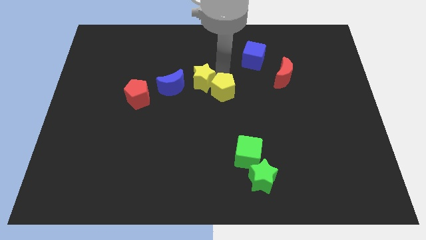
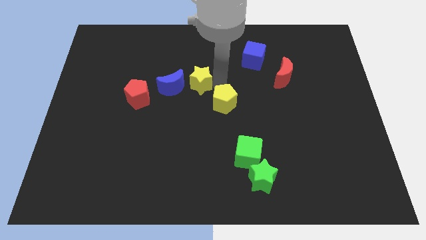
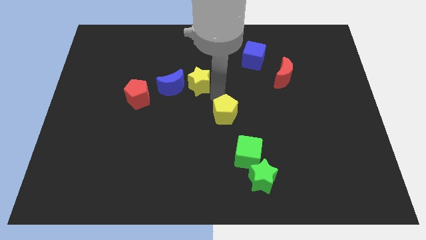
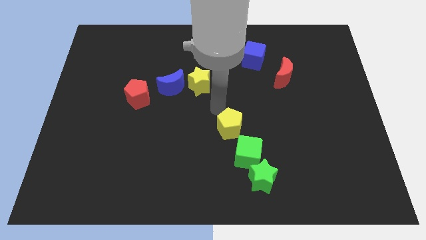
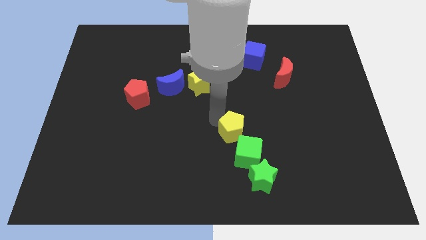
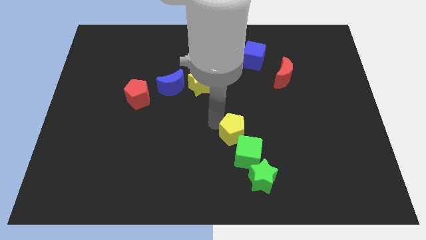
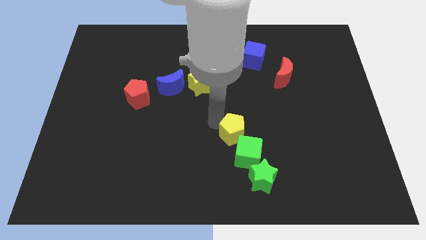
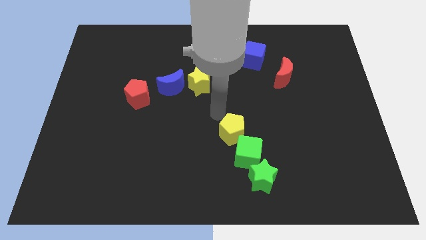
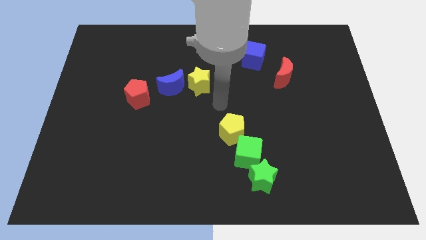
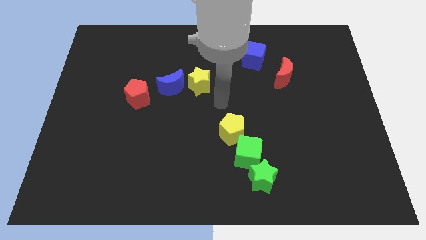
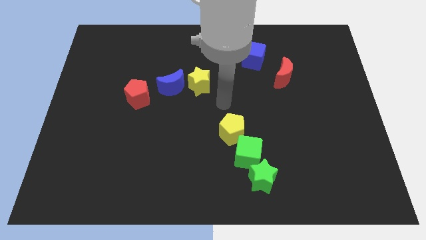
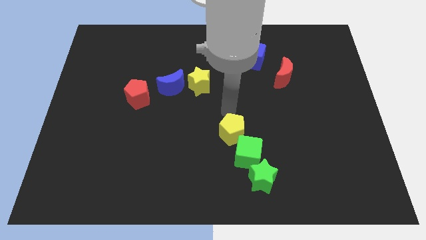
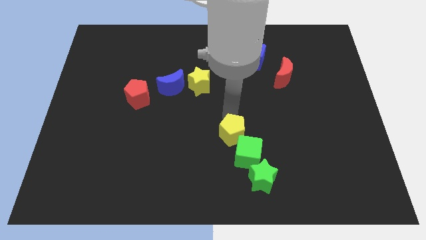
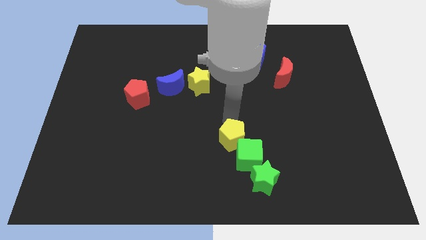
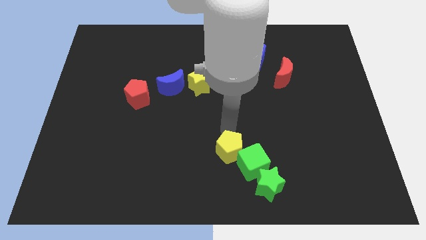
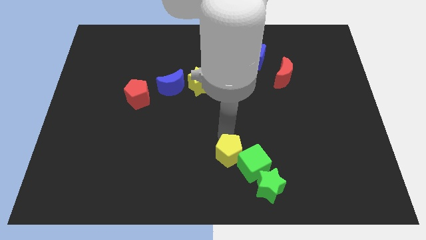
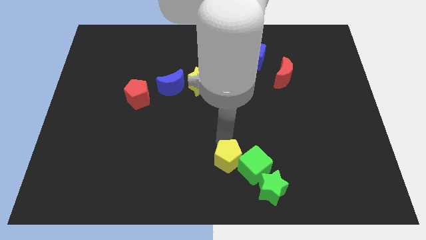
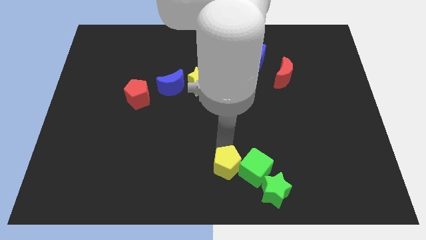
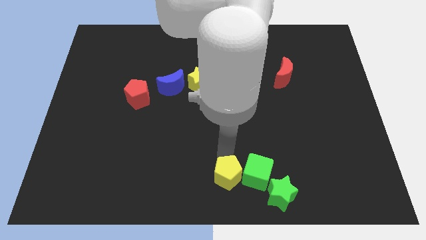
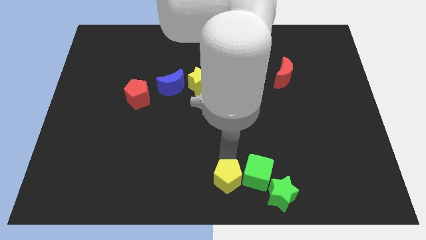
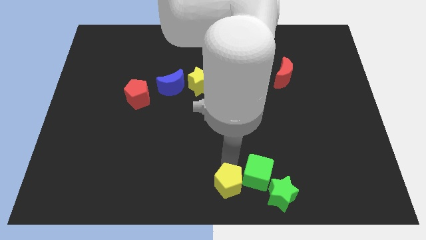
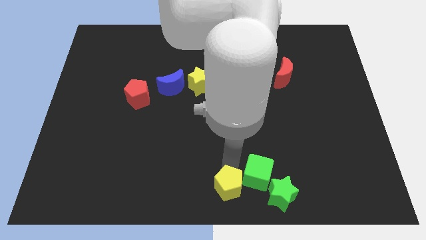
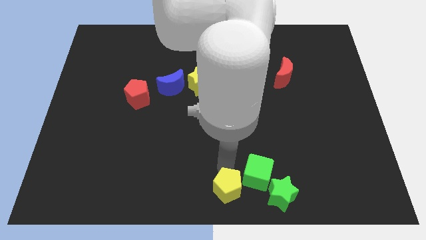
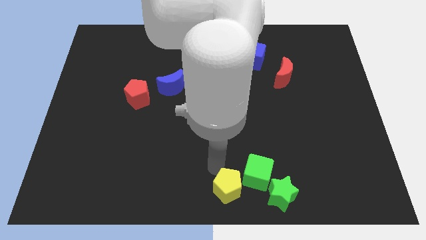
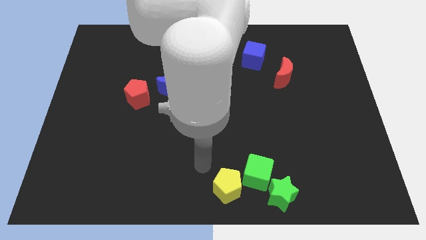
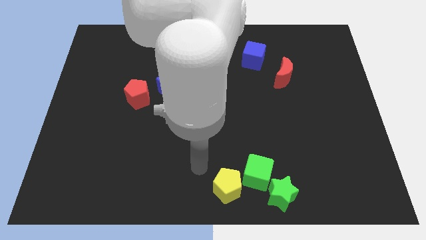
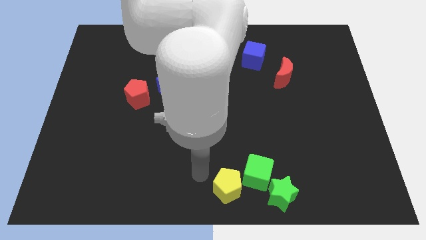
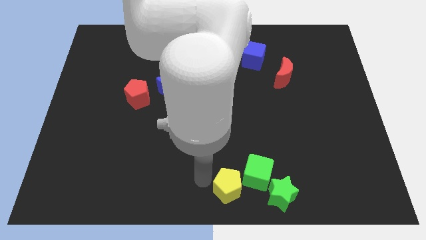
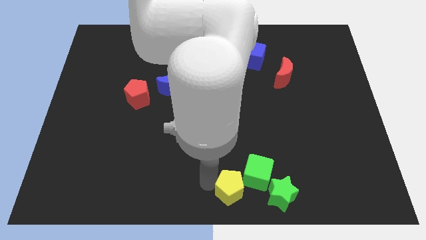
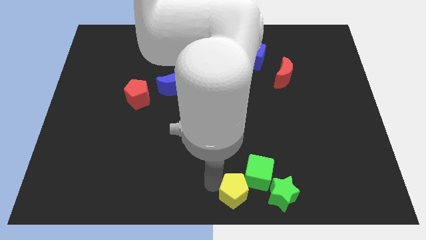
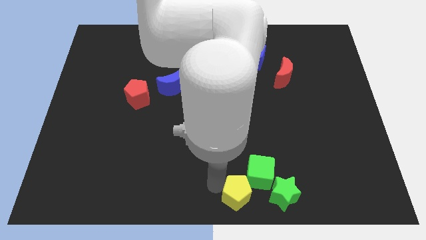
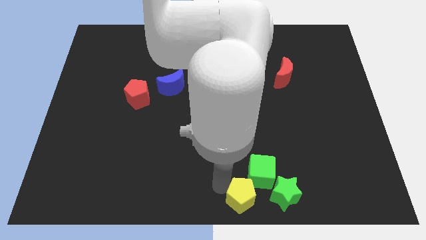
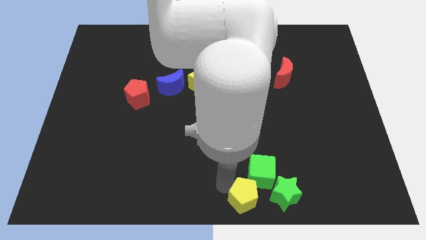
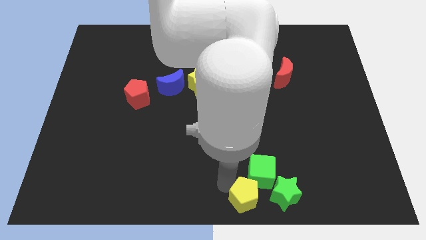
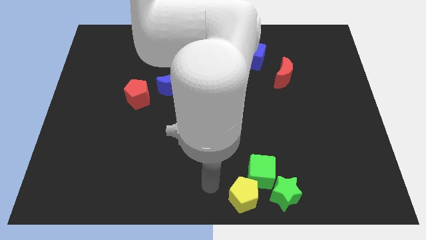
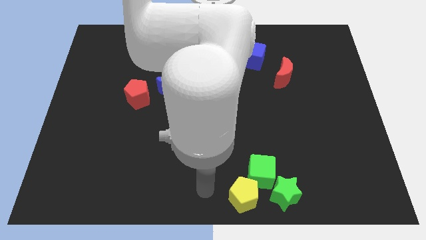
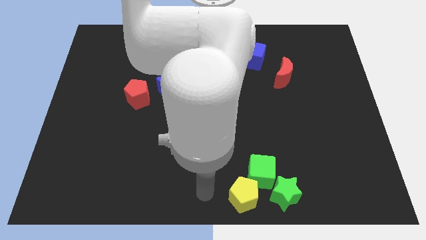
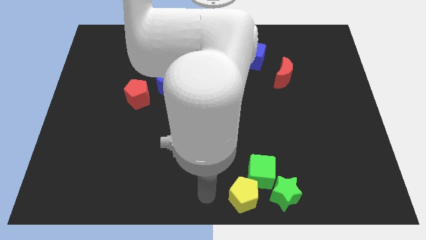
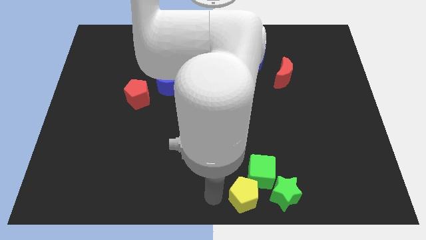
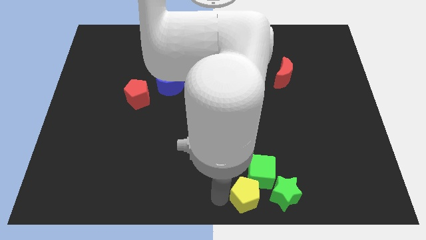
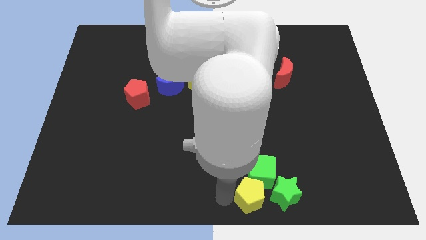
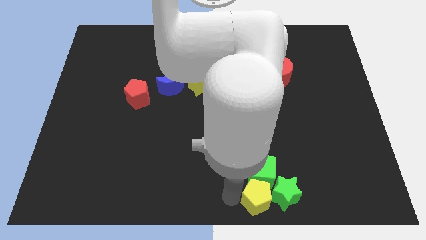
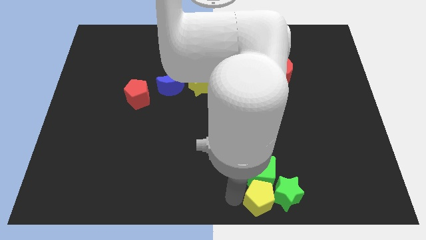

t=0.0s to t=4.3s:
push the yellow pentagon to the bottom of the green cube

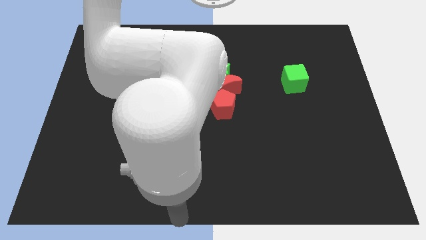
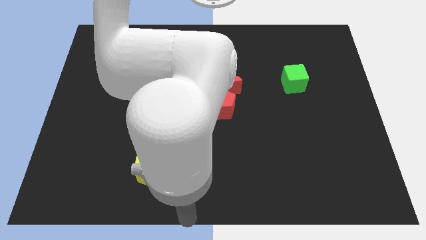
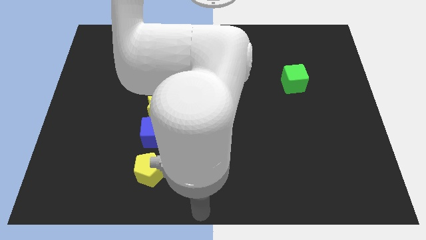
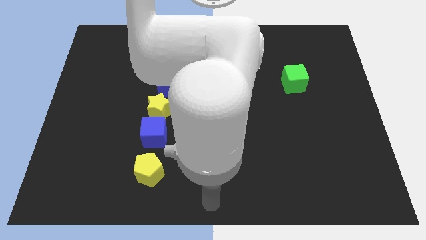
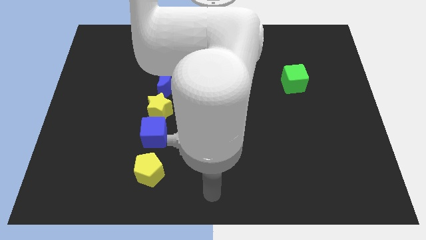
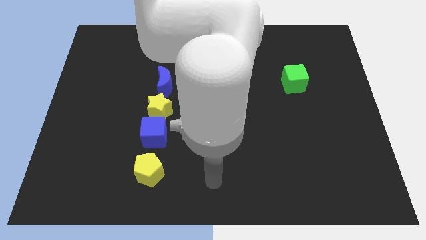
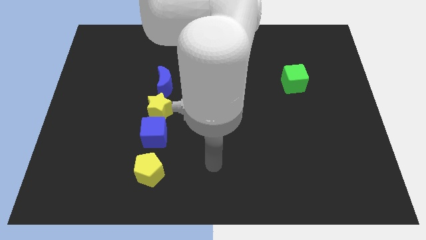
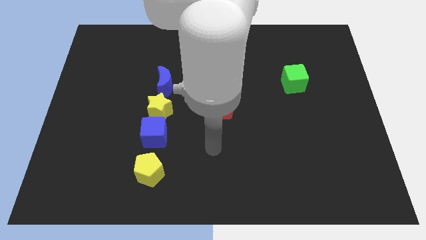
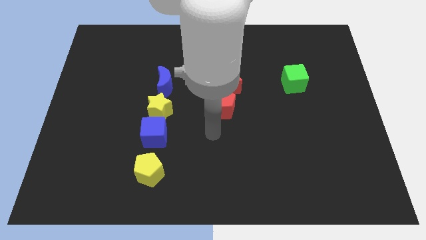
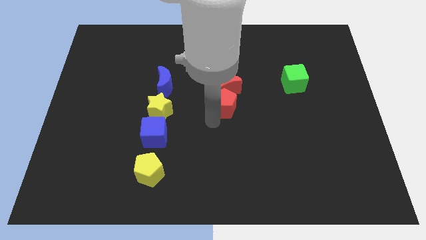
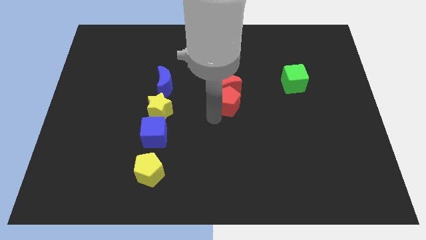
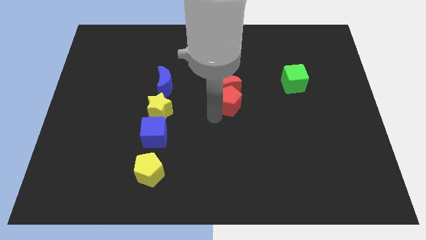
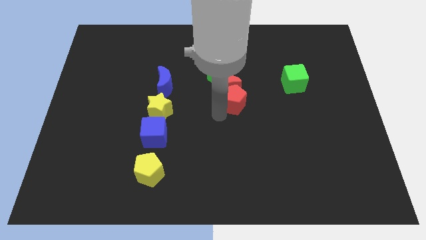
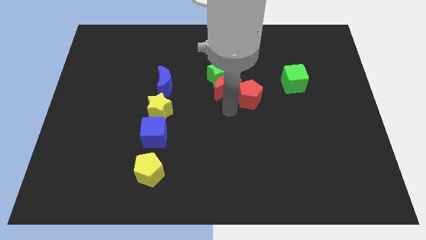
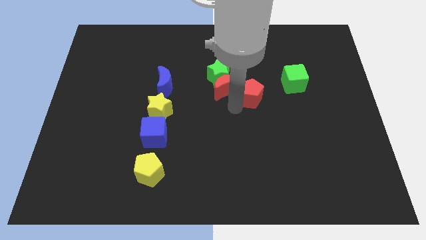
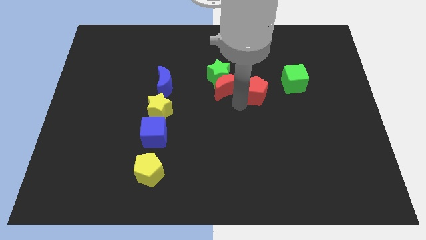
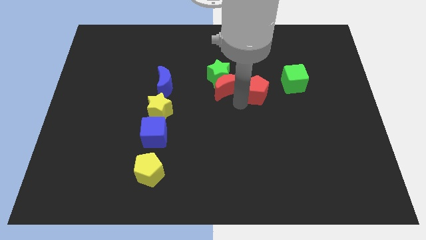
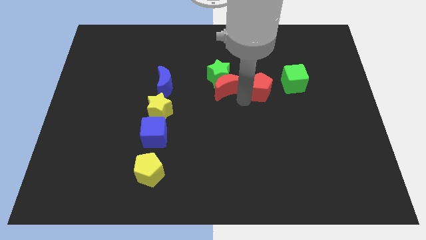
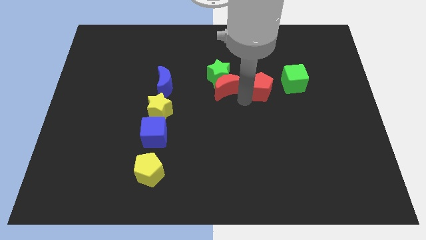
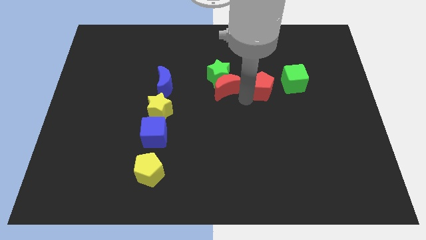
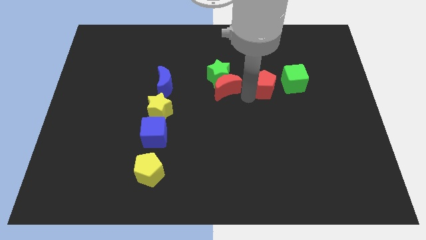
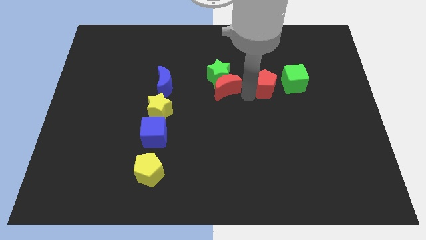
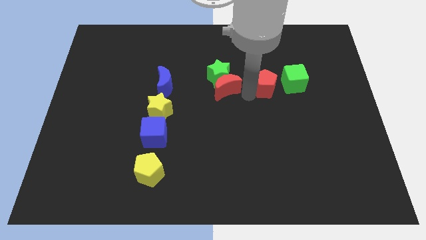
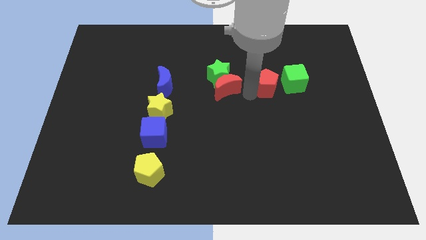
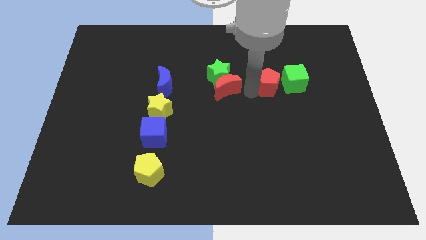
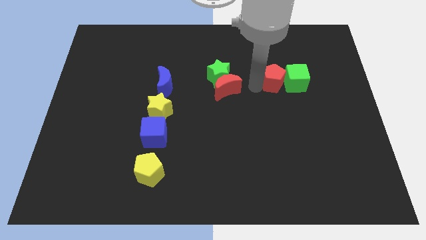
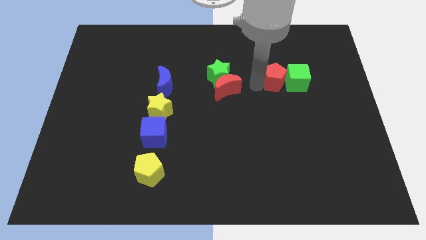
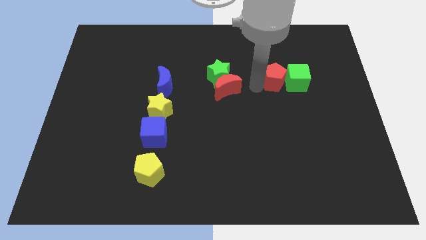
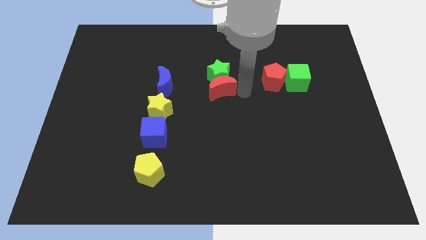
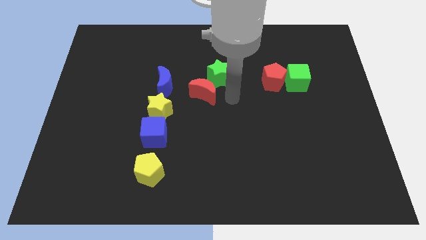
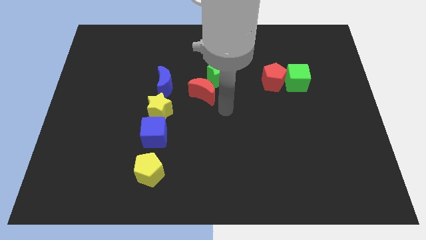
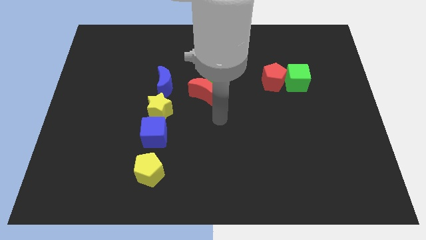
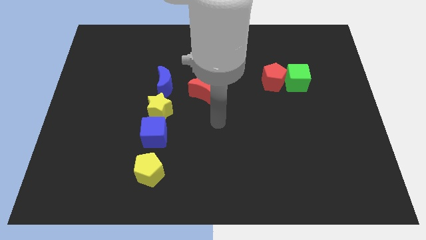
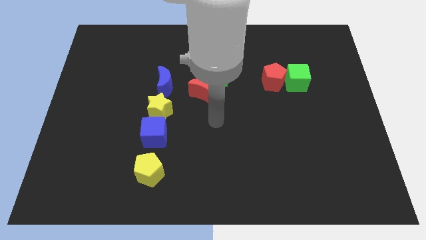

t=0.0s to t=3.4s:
move red pentagon into the green cube

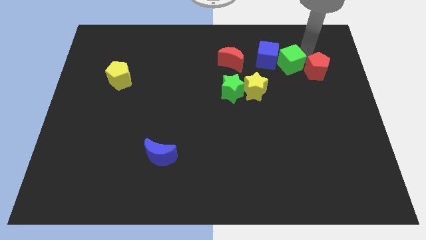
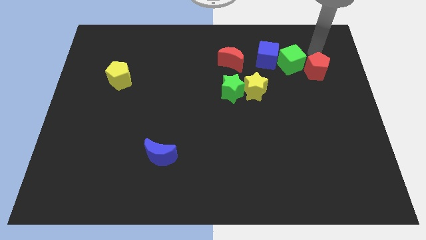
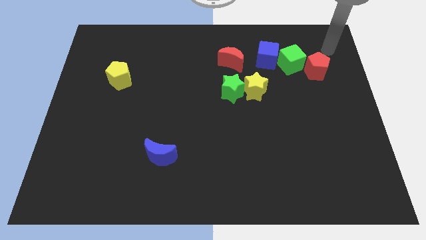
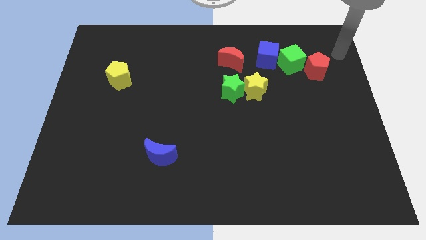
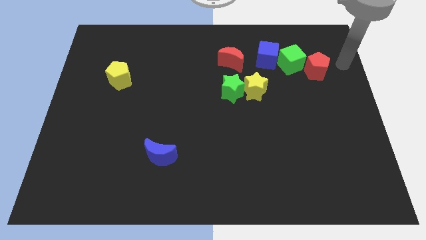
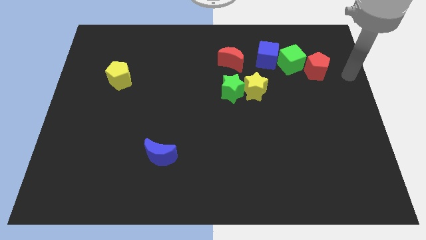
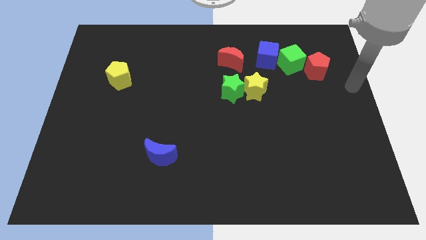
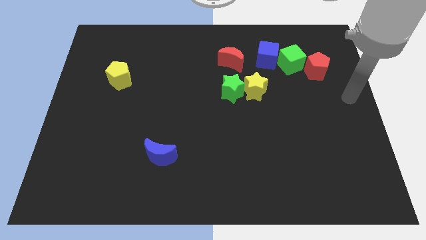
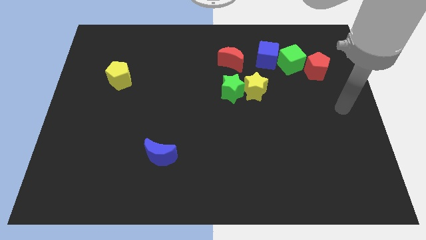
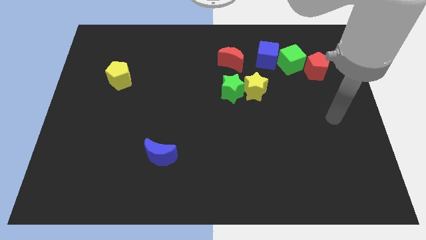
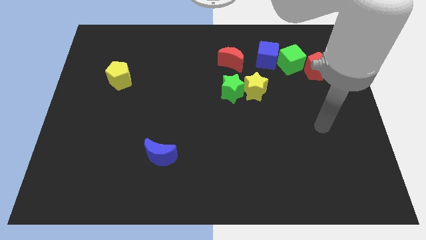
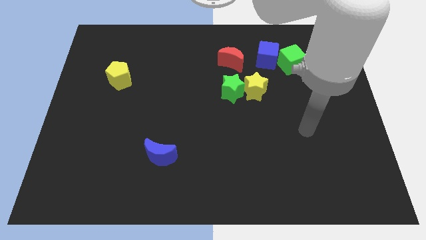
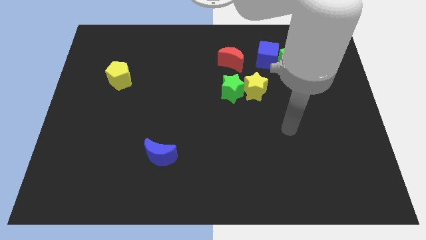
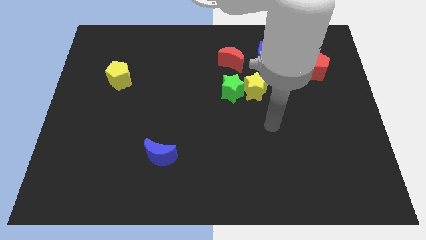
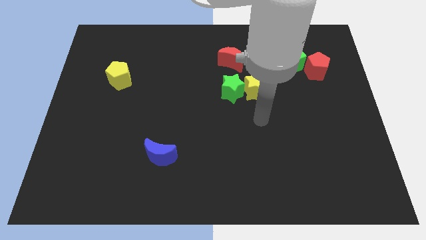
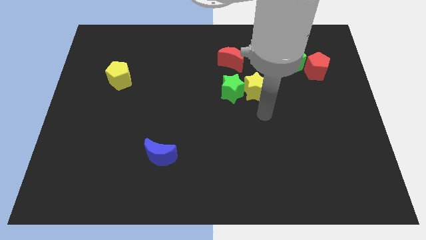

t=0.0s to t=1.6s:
move your arm away from the green cube
